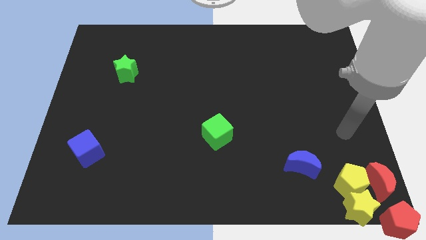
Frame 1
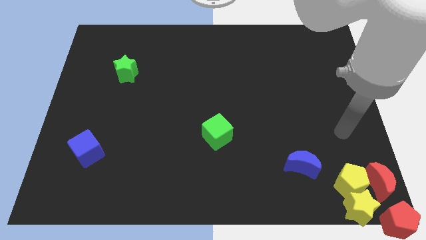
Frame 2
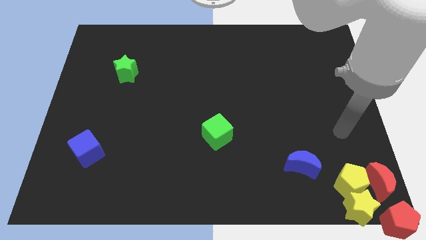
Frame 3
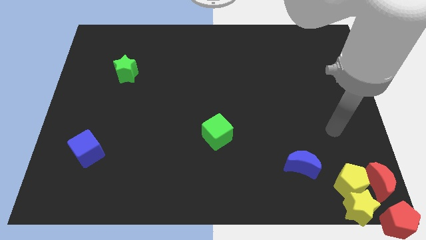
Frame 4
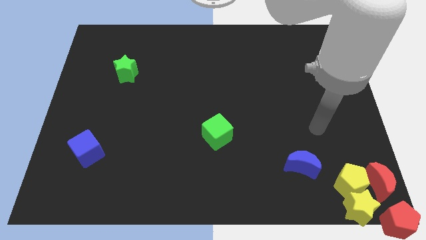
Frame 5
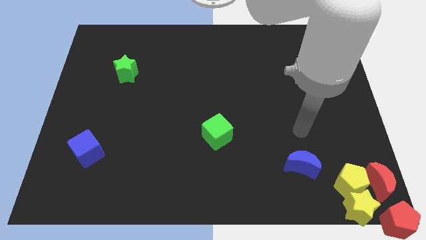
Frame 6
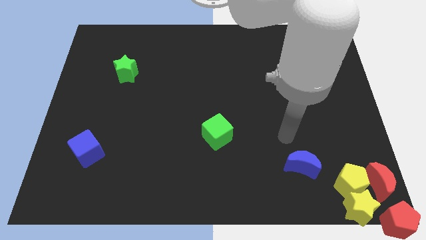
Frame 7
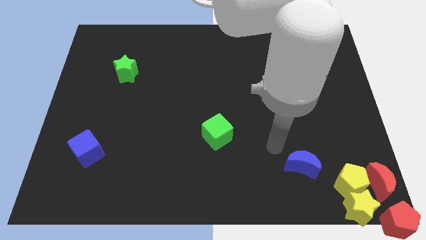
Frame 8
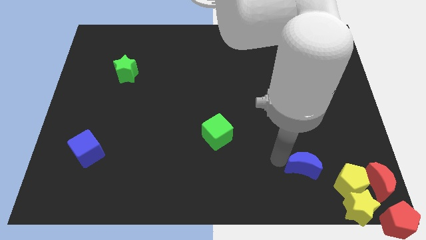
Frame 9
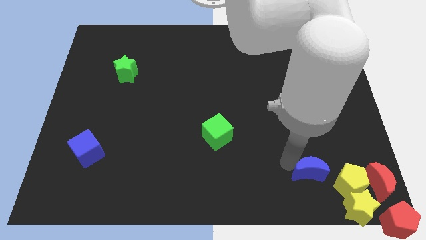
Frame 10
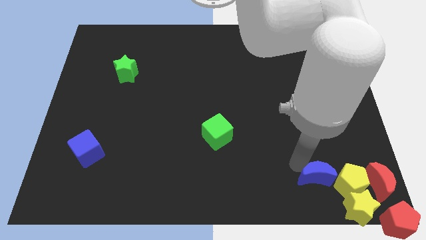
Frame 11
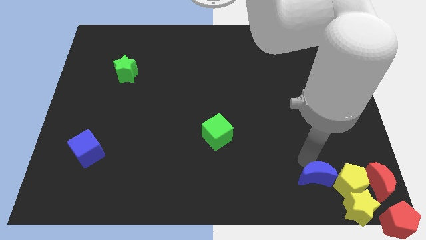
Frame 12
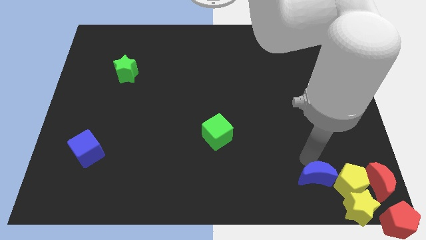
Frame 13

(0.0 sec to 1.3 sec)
push the blue crescent close to the left side of the yellow pentagon

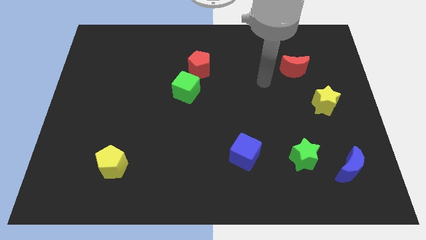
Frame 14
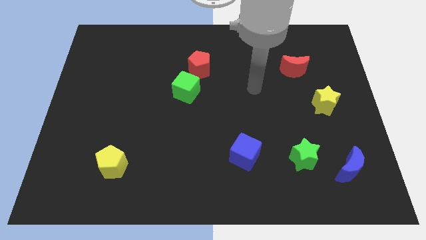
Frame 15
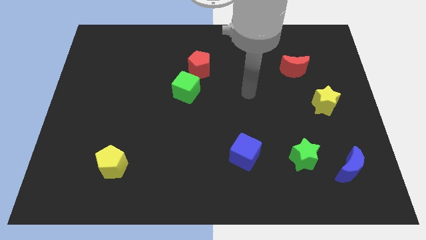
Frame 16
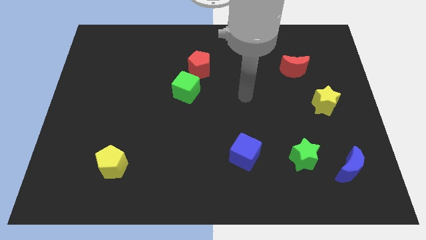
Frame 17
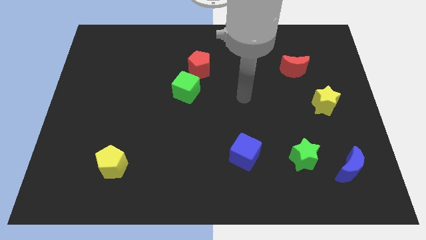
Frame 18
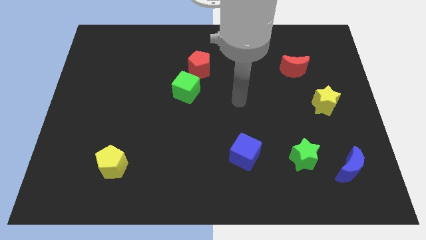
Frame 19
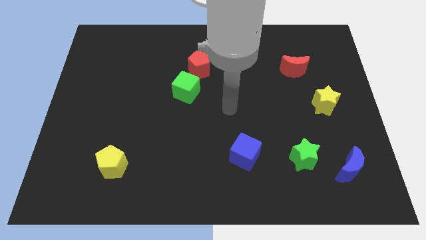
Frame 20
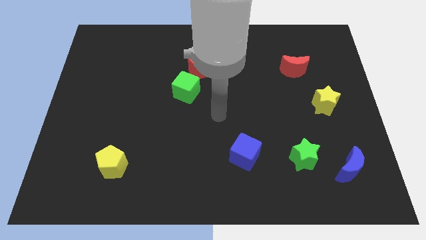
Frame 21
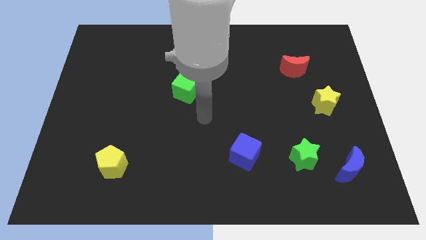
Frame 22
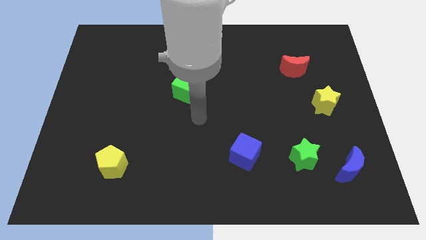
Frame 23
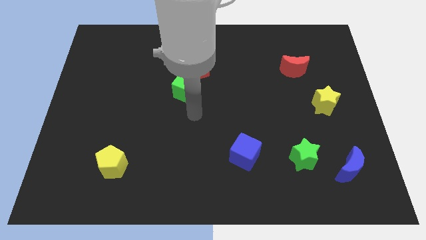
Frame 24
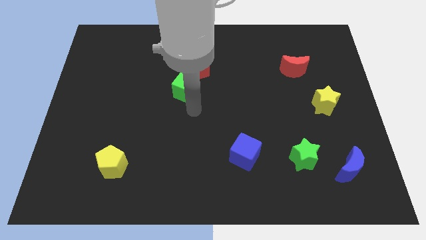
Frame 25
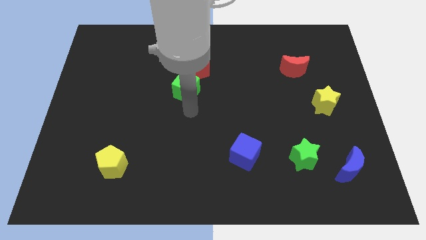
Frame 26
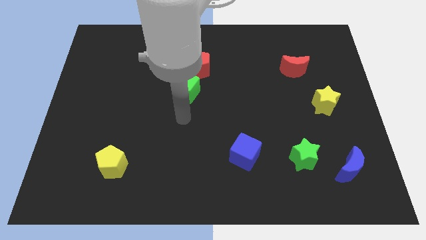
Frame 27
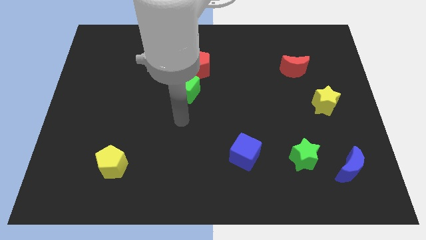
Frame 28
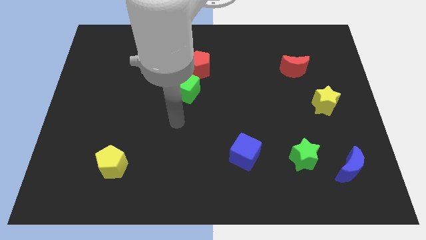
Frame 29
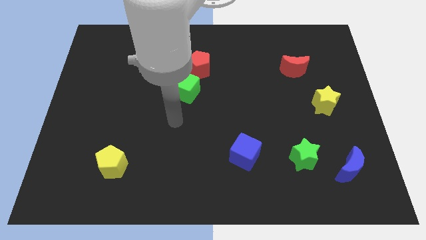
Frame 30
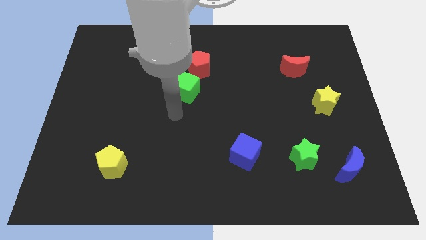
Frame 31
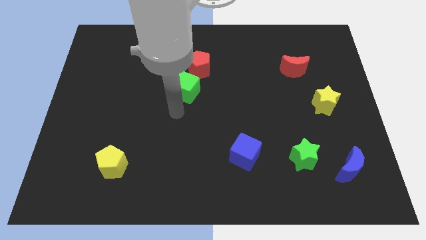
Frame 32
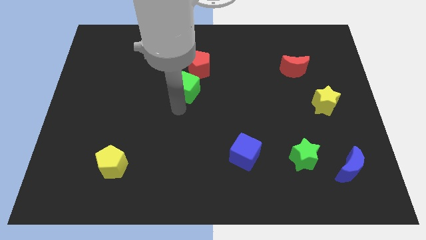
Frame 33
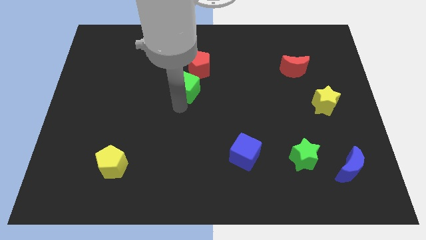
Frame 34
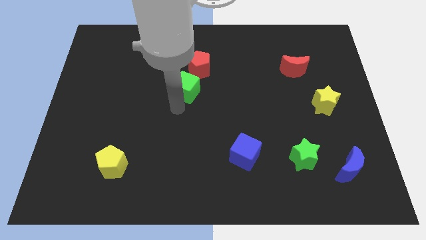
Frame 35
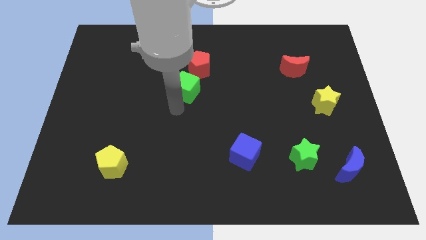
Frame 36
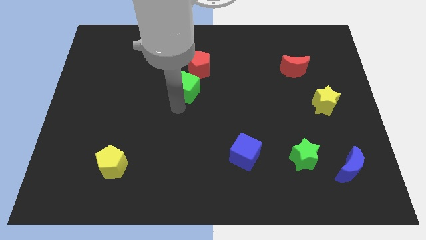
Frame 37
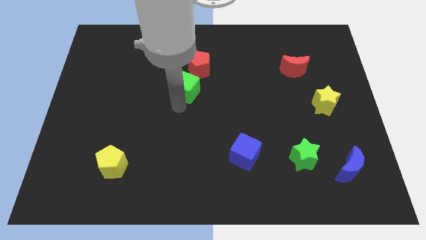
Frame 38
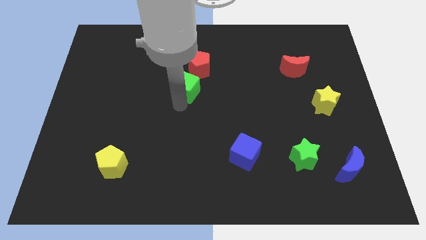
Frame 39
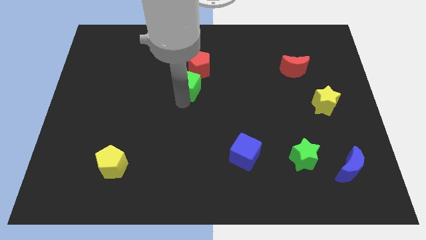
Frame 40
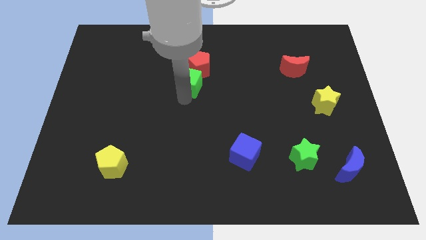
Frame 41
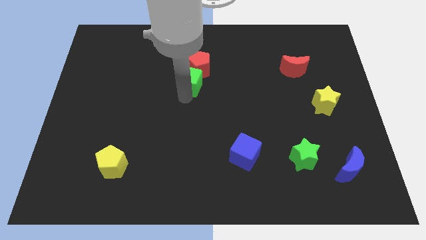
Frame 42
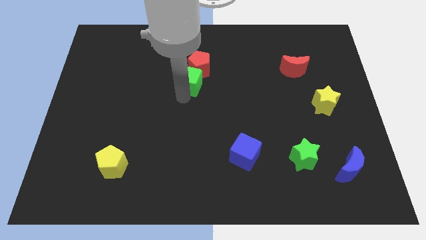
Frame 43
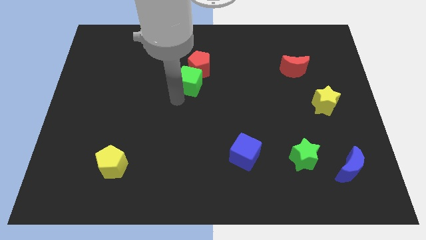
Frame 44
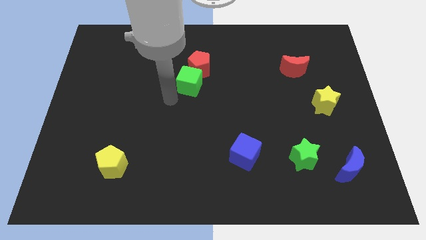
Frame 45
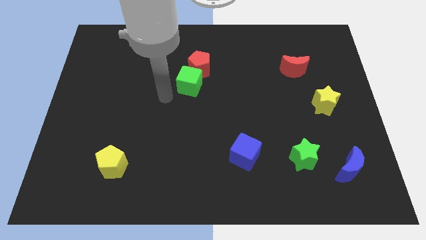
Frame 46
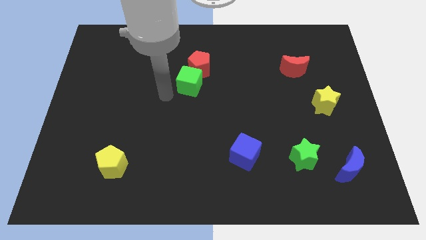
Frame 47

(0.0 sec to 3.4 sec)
push the green cube upwards slightly

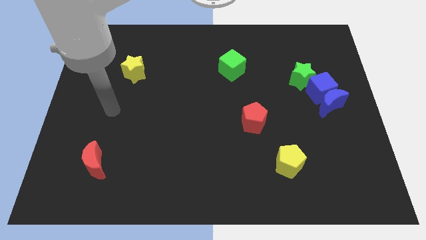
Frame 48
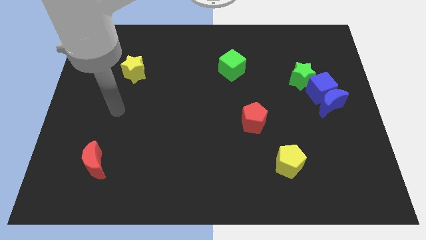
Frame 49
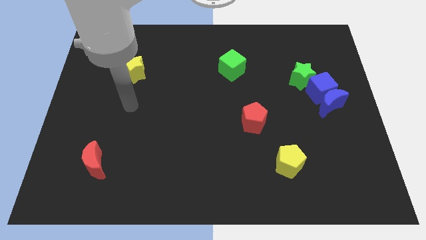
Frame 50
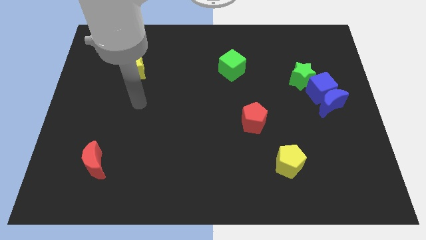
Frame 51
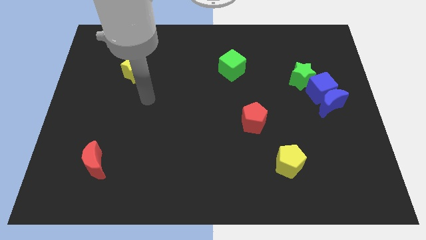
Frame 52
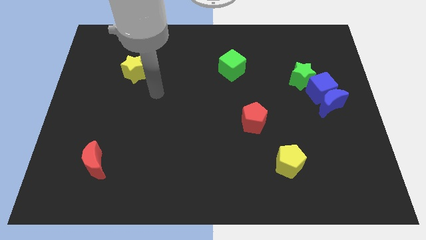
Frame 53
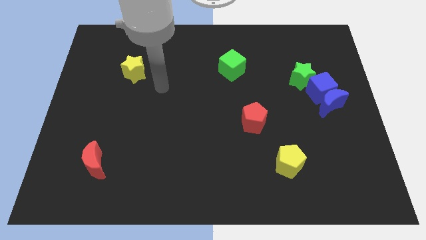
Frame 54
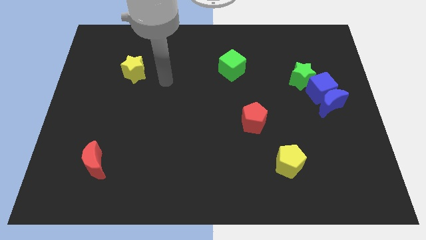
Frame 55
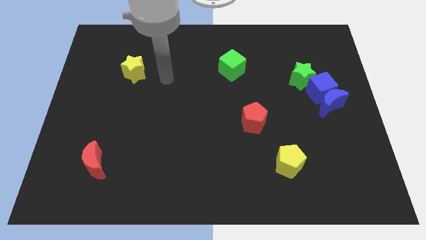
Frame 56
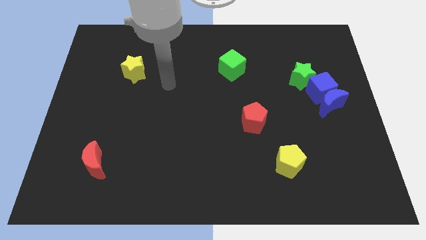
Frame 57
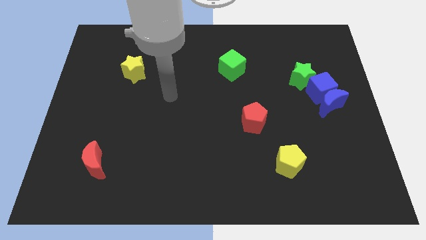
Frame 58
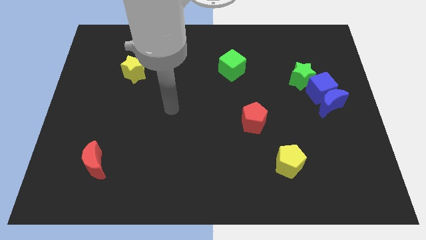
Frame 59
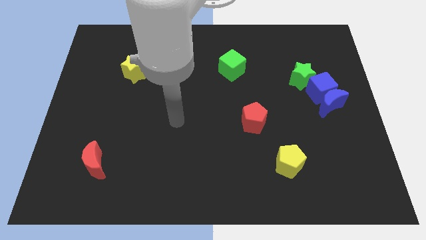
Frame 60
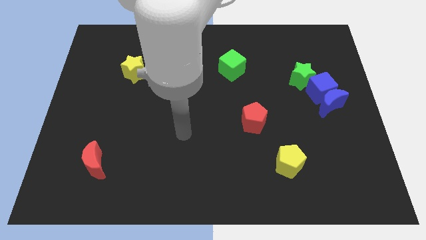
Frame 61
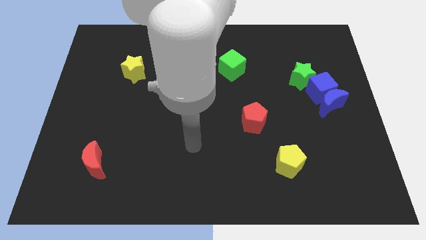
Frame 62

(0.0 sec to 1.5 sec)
place your arm in between the red blocks

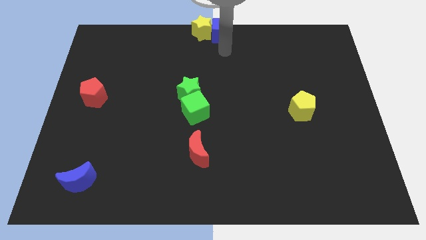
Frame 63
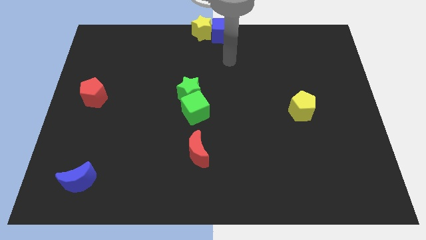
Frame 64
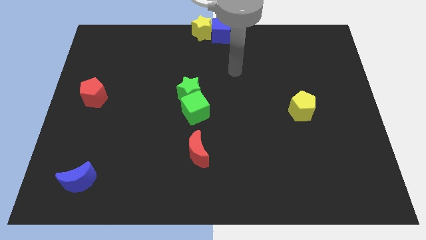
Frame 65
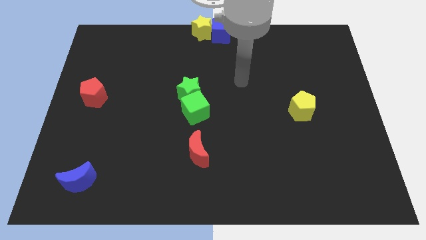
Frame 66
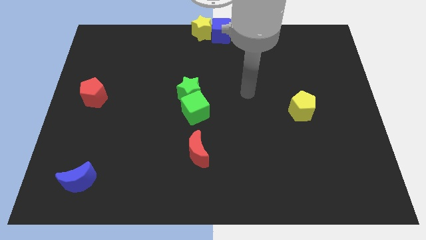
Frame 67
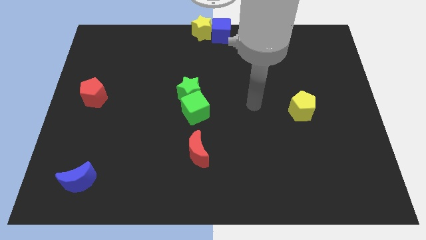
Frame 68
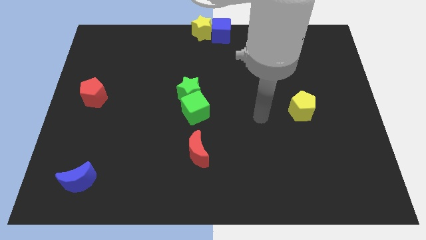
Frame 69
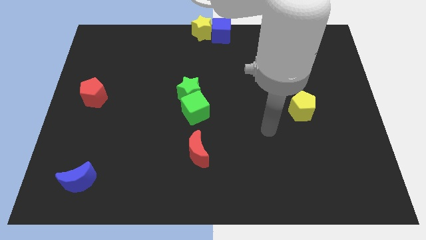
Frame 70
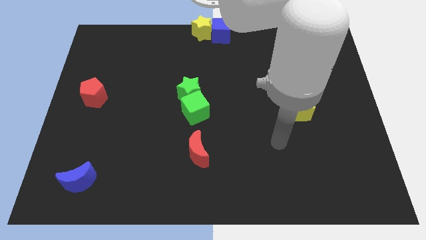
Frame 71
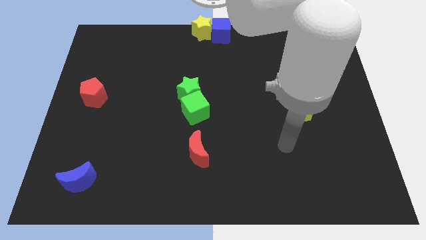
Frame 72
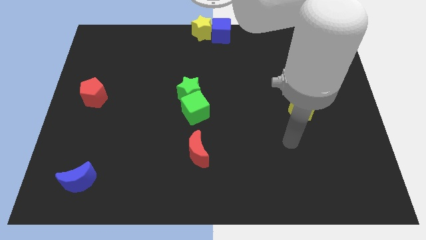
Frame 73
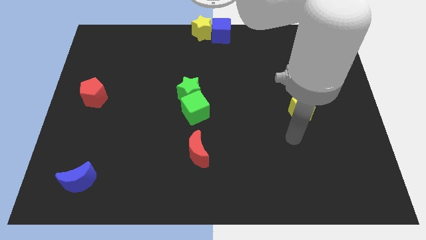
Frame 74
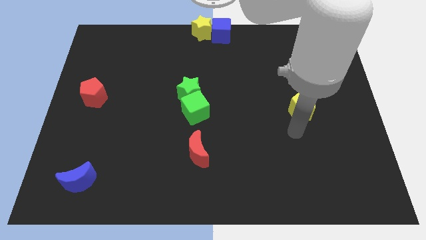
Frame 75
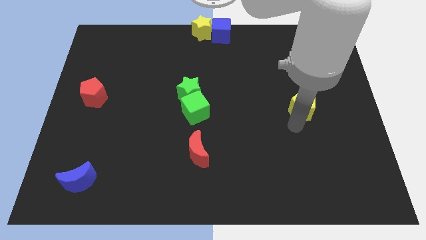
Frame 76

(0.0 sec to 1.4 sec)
move your arm towards the yellow pentagon

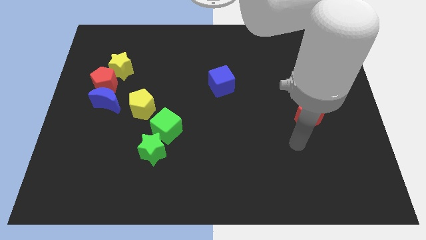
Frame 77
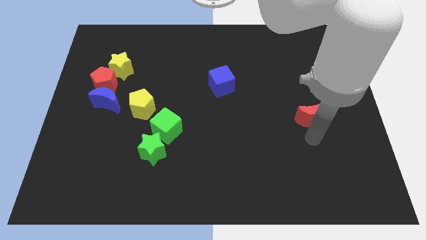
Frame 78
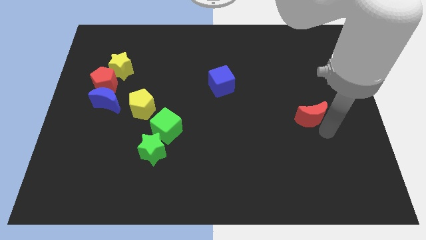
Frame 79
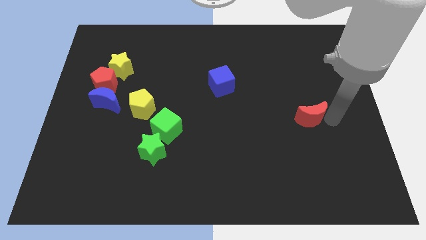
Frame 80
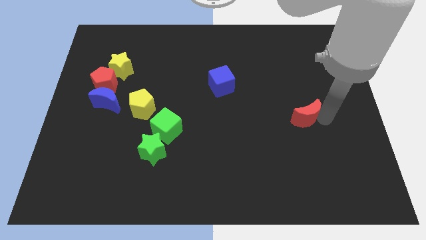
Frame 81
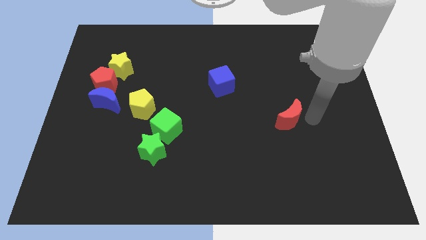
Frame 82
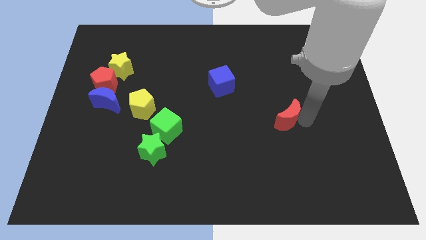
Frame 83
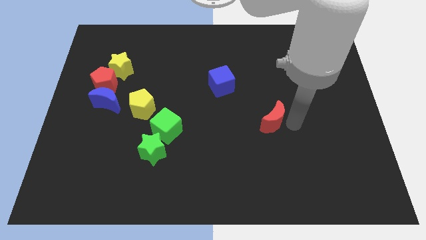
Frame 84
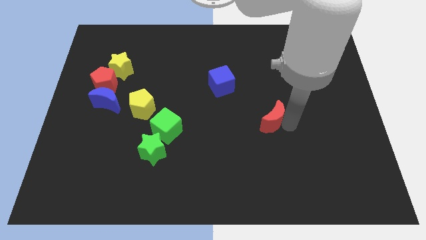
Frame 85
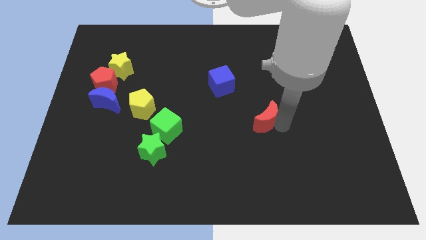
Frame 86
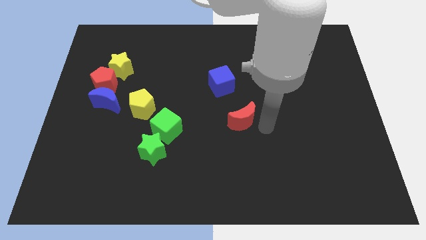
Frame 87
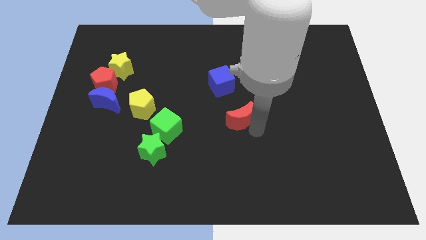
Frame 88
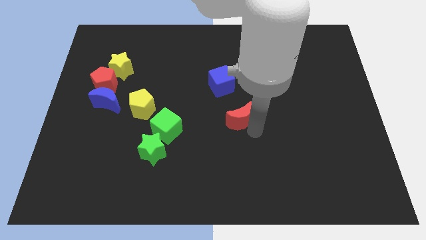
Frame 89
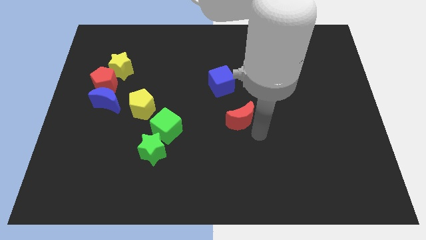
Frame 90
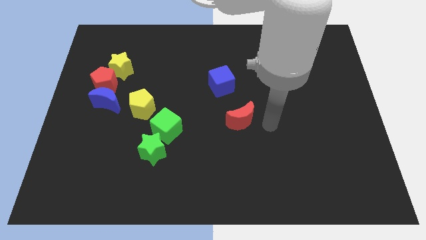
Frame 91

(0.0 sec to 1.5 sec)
push the red crescent towards the green cube
